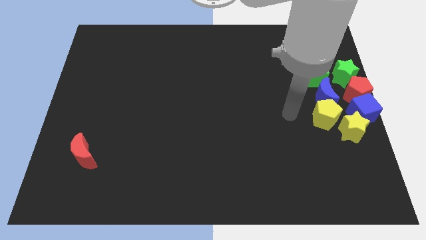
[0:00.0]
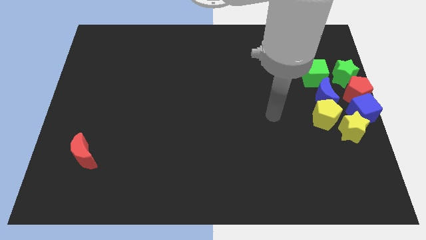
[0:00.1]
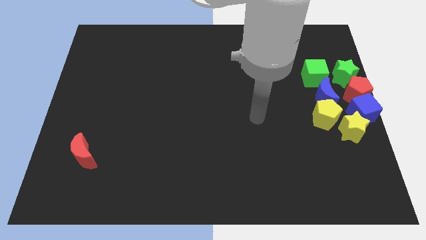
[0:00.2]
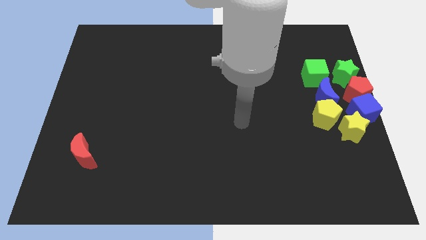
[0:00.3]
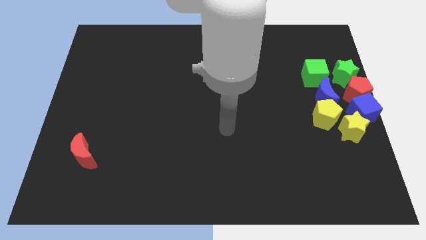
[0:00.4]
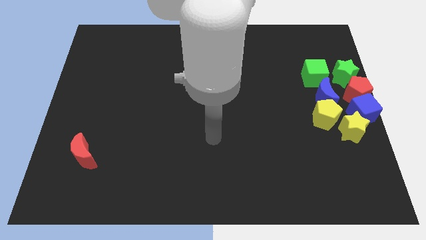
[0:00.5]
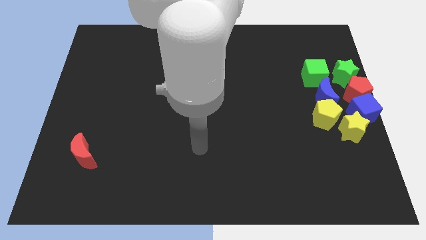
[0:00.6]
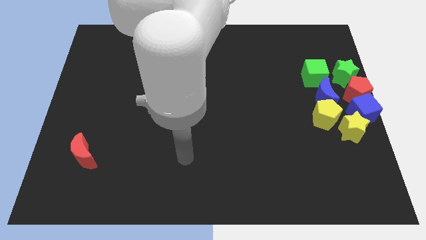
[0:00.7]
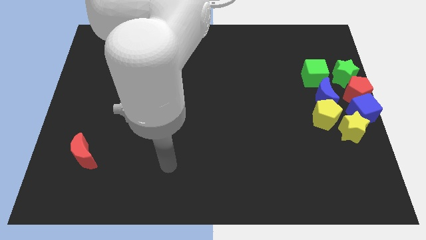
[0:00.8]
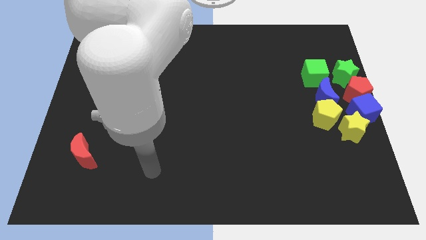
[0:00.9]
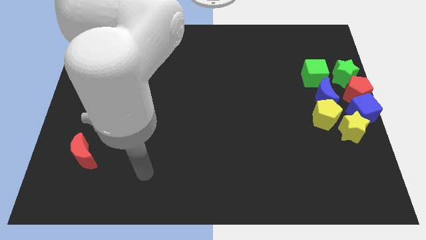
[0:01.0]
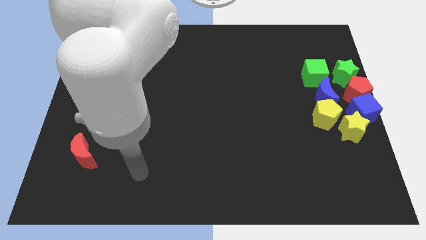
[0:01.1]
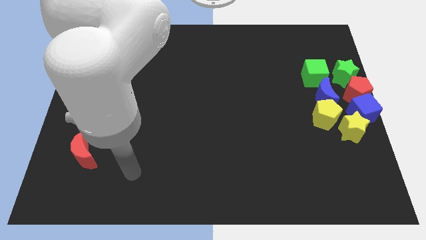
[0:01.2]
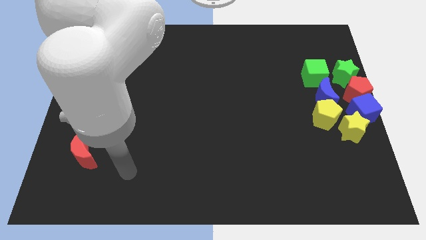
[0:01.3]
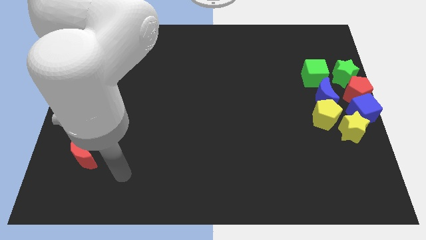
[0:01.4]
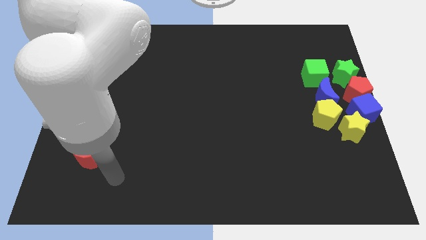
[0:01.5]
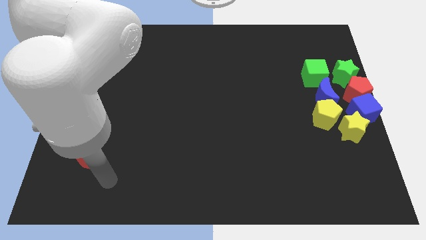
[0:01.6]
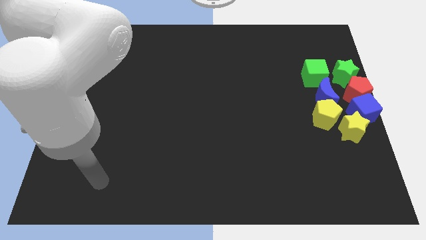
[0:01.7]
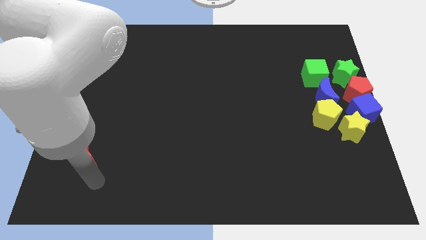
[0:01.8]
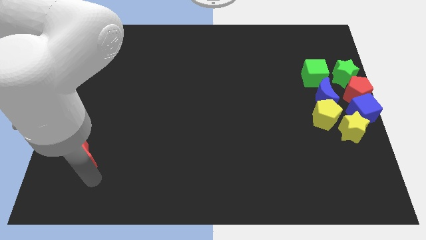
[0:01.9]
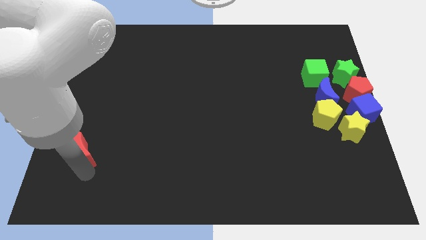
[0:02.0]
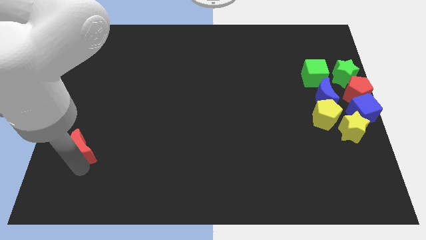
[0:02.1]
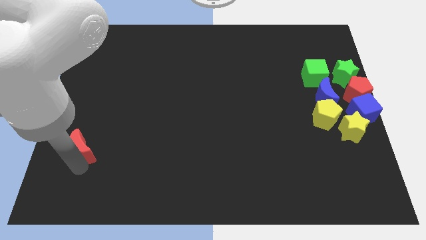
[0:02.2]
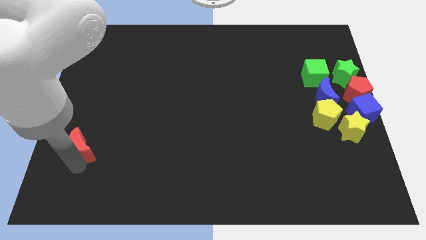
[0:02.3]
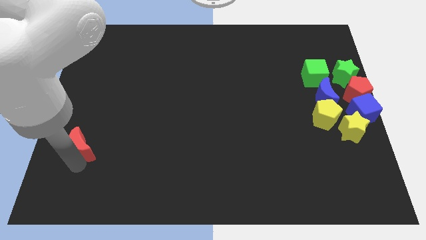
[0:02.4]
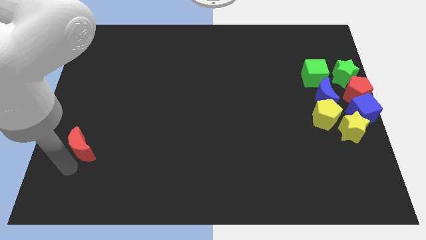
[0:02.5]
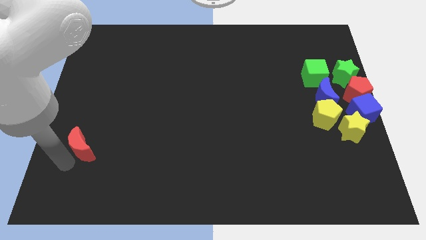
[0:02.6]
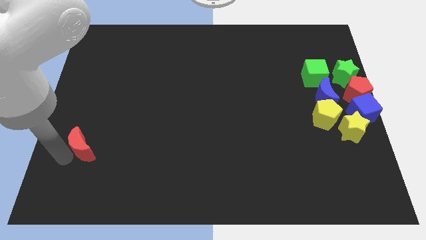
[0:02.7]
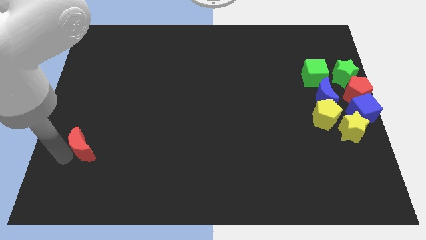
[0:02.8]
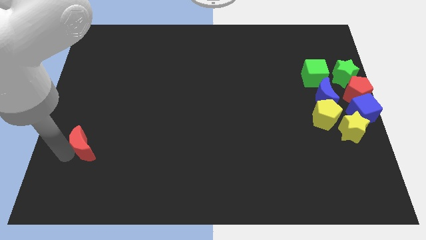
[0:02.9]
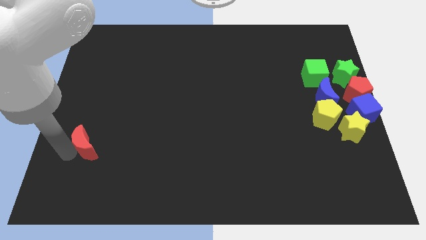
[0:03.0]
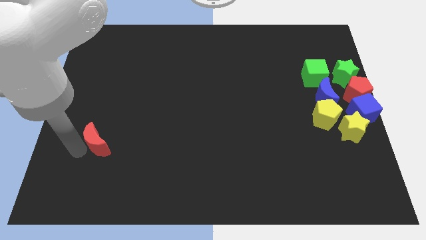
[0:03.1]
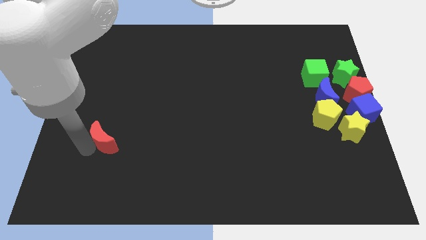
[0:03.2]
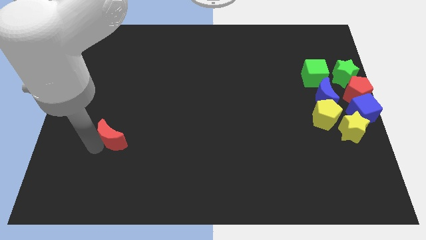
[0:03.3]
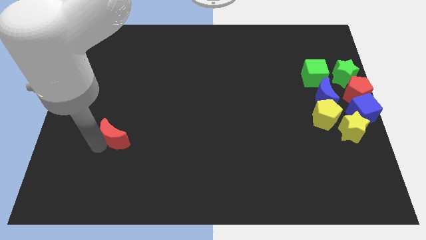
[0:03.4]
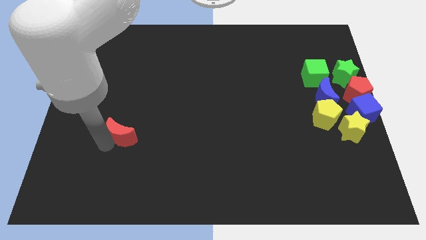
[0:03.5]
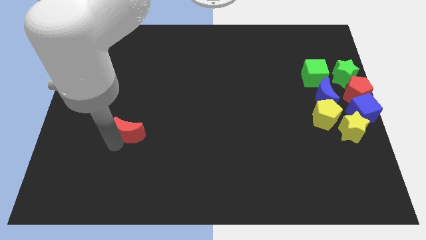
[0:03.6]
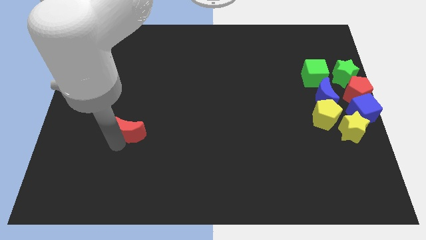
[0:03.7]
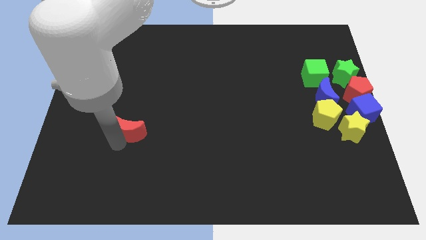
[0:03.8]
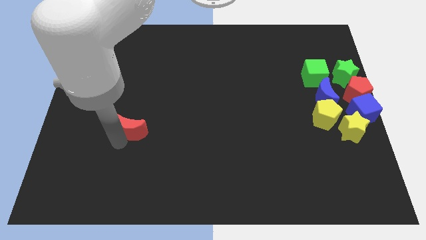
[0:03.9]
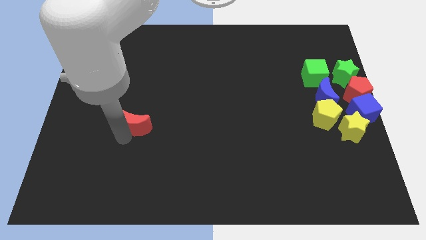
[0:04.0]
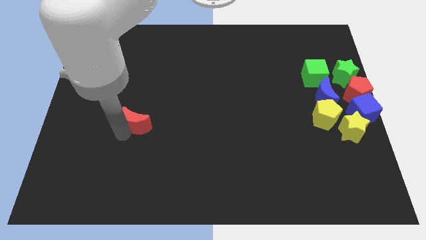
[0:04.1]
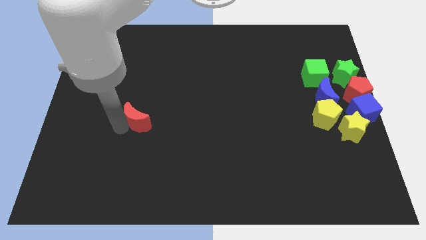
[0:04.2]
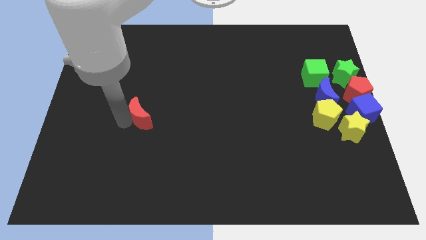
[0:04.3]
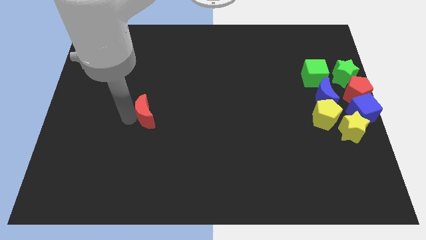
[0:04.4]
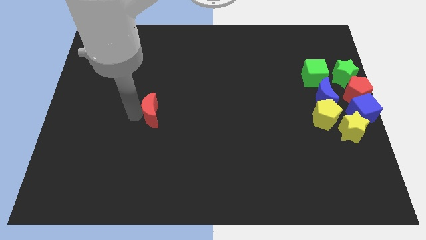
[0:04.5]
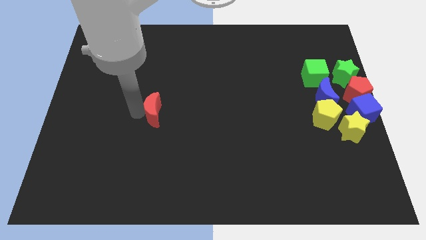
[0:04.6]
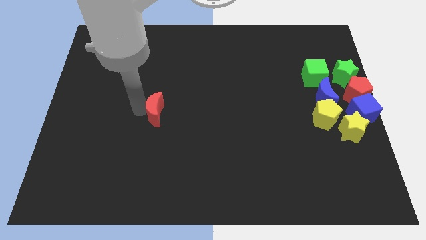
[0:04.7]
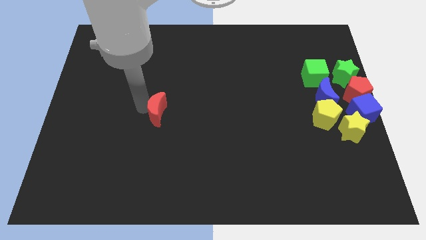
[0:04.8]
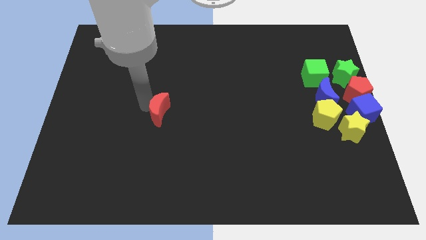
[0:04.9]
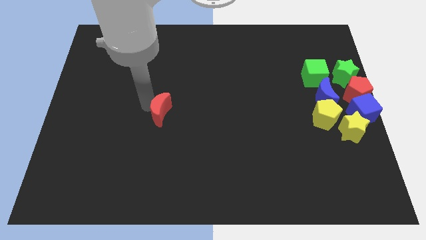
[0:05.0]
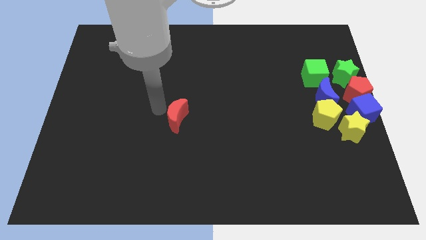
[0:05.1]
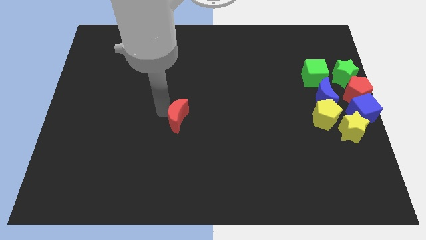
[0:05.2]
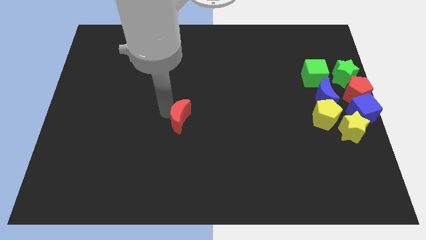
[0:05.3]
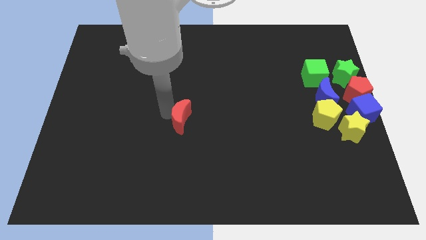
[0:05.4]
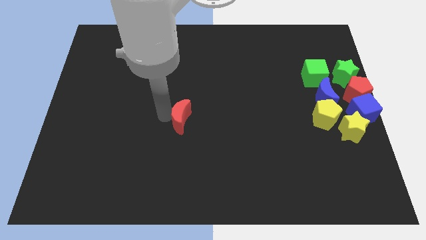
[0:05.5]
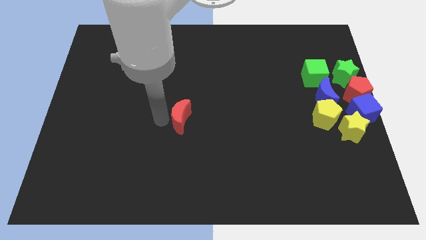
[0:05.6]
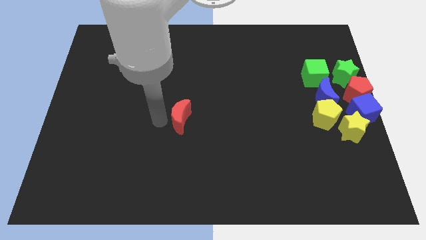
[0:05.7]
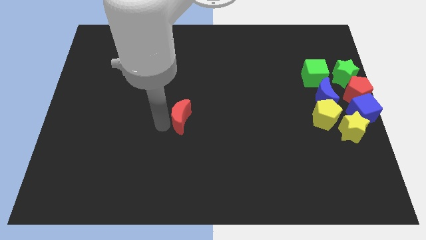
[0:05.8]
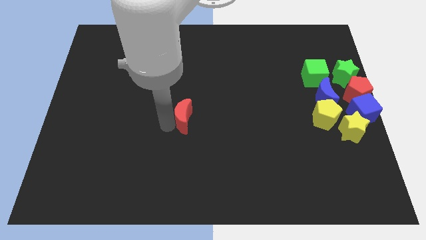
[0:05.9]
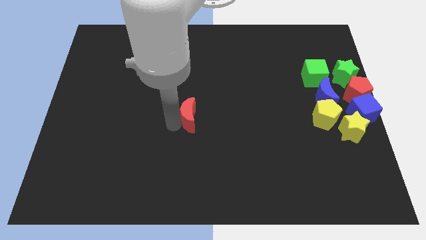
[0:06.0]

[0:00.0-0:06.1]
place the red crescent at the center of the board

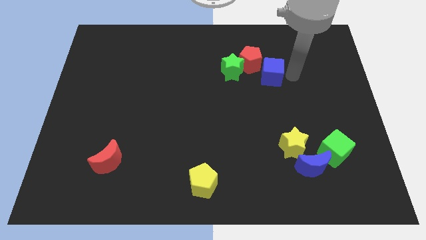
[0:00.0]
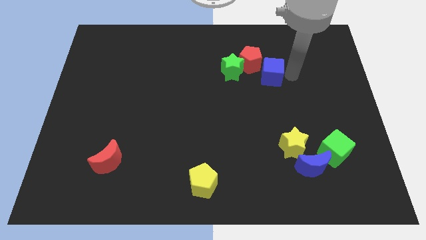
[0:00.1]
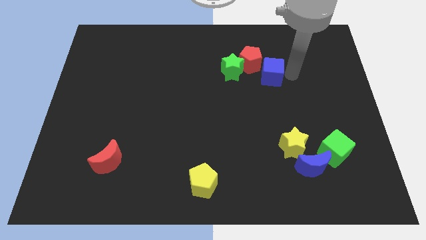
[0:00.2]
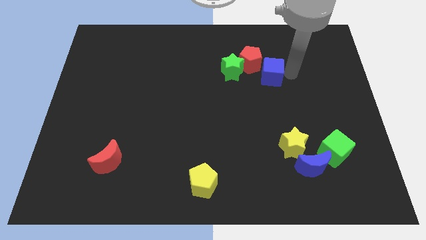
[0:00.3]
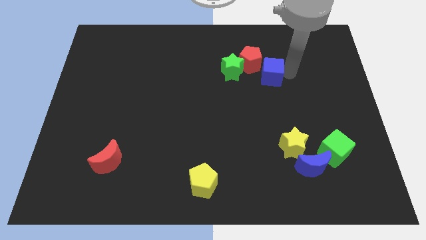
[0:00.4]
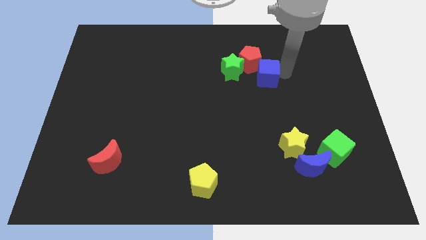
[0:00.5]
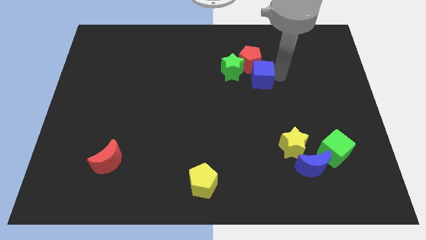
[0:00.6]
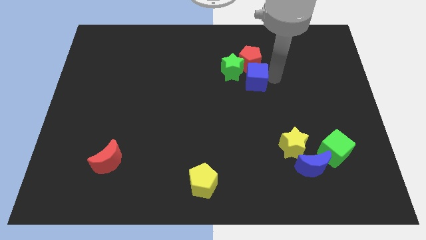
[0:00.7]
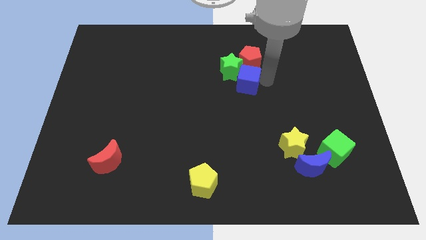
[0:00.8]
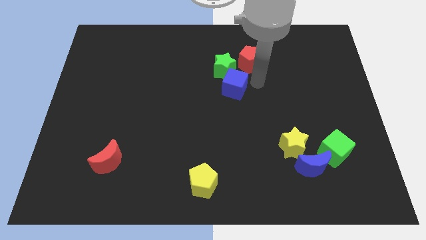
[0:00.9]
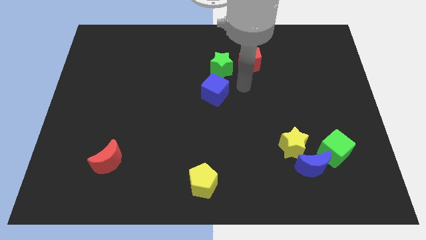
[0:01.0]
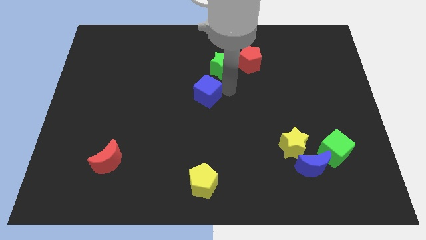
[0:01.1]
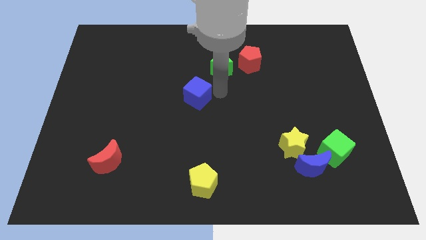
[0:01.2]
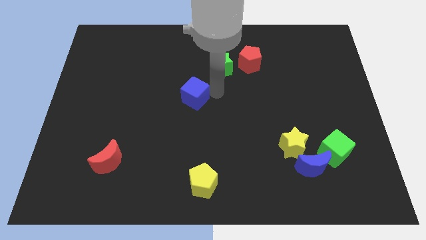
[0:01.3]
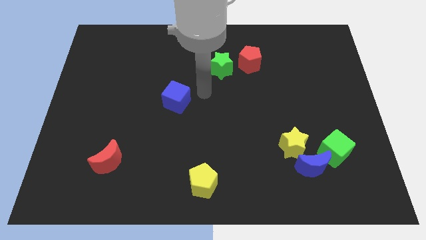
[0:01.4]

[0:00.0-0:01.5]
move the blue cube to the top side of the yellow pentagon

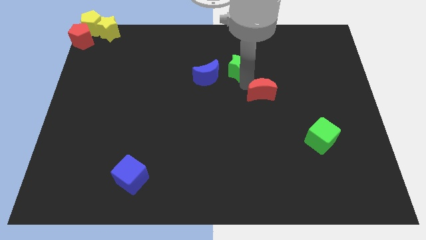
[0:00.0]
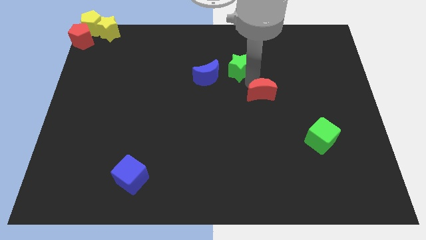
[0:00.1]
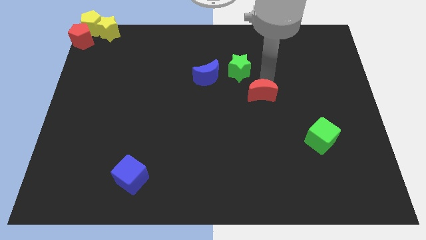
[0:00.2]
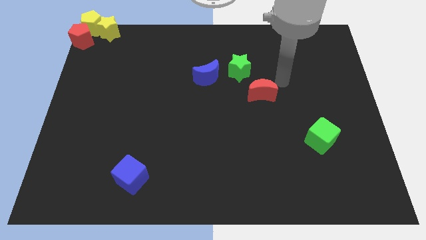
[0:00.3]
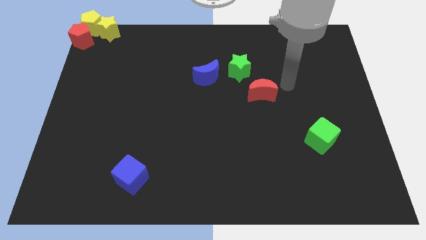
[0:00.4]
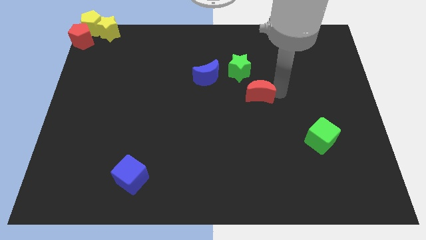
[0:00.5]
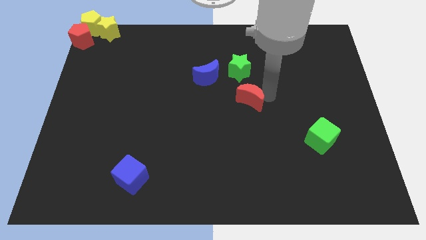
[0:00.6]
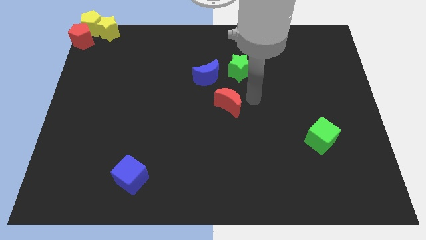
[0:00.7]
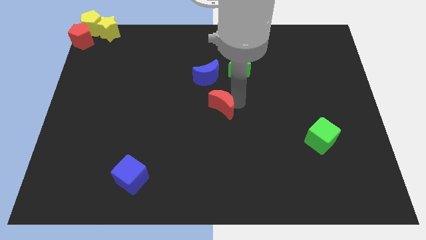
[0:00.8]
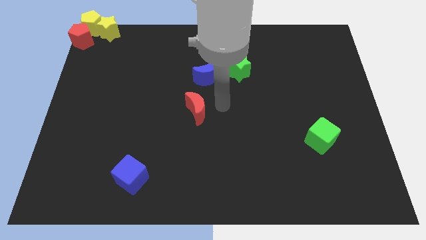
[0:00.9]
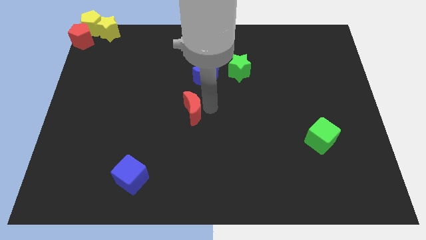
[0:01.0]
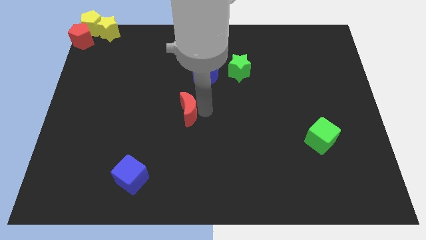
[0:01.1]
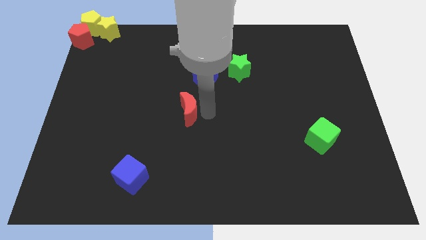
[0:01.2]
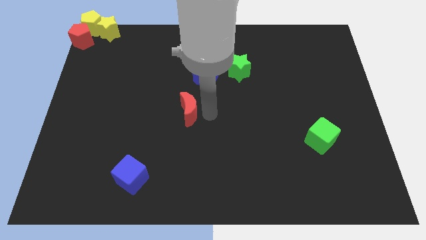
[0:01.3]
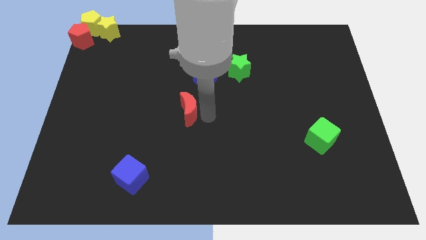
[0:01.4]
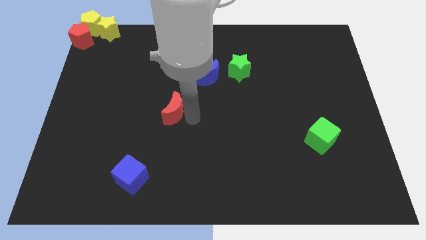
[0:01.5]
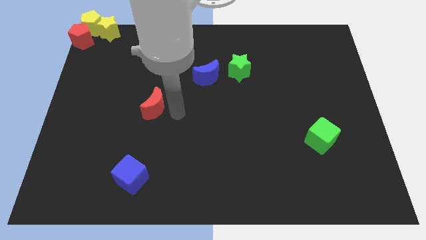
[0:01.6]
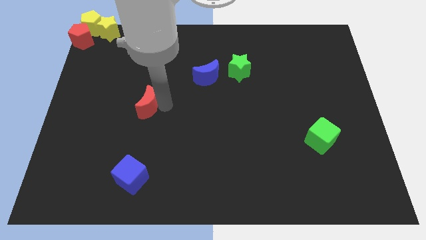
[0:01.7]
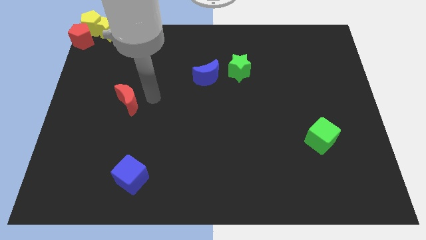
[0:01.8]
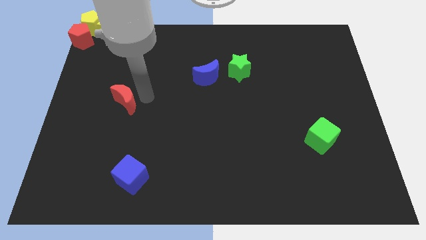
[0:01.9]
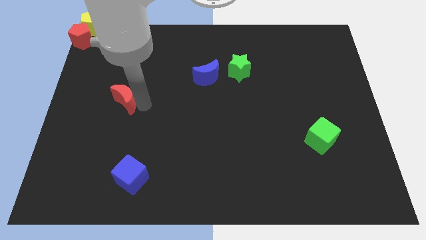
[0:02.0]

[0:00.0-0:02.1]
push red crescent towards the group of objects
